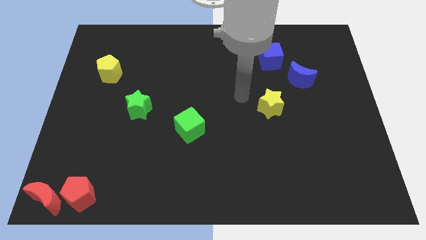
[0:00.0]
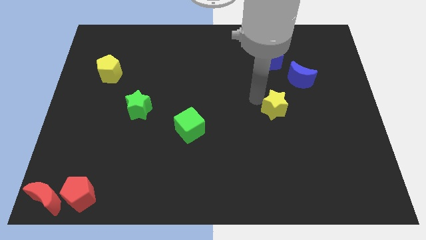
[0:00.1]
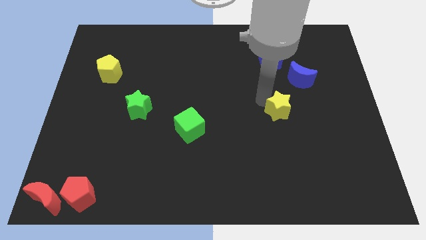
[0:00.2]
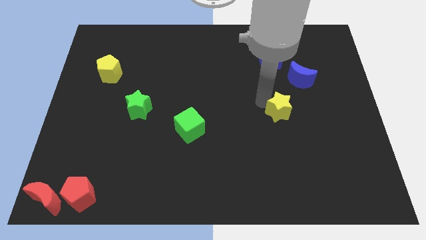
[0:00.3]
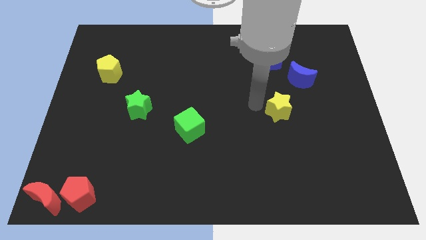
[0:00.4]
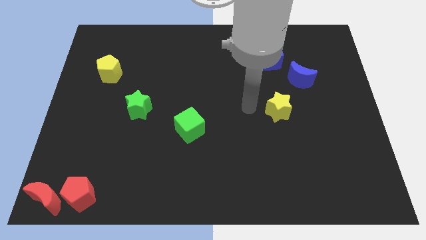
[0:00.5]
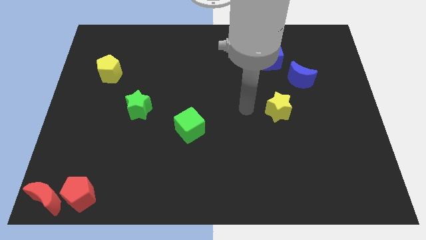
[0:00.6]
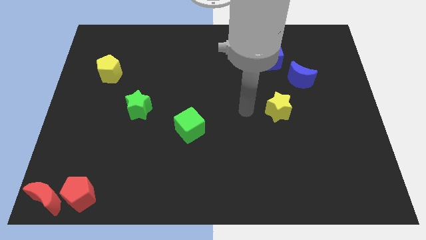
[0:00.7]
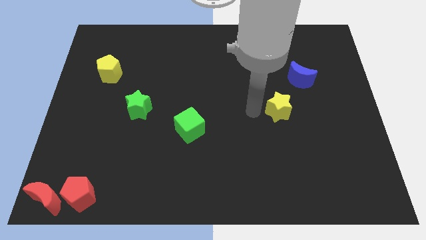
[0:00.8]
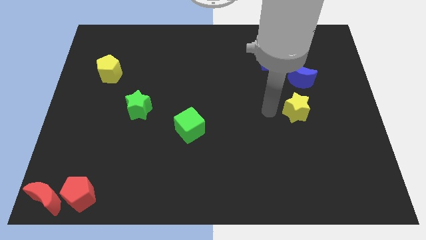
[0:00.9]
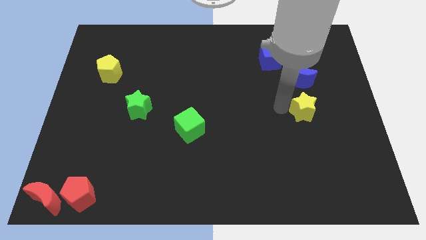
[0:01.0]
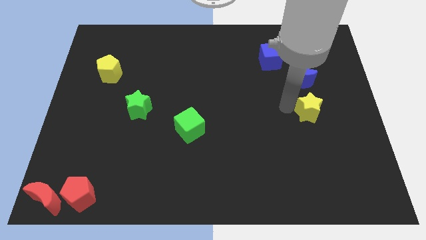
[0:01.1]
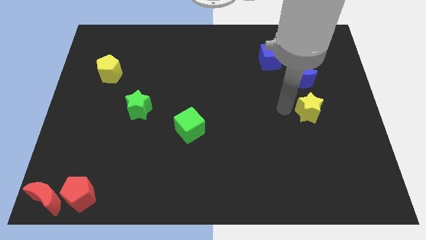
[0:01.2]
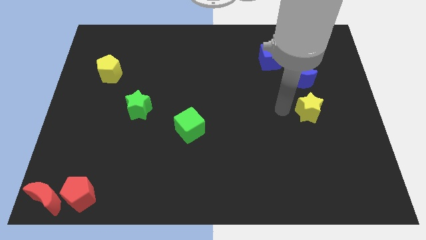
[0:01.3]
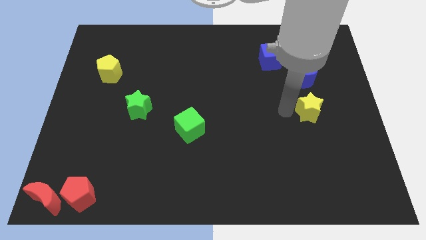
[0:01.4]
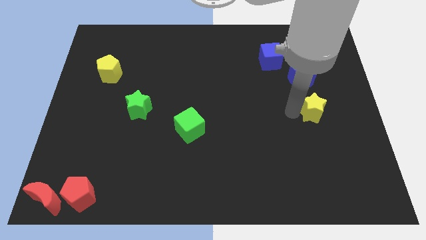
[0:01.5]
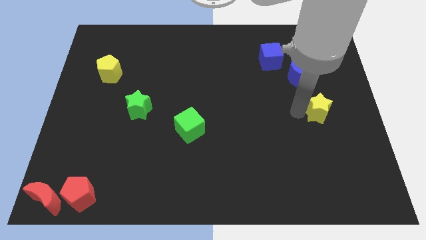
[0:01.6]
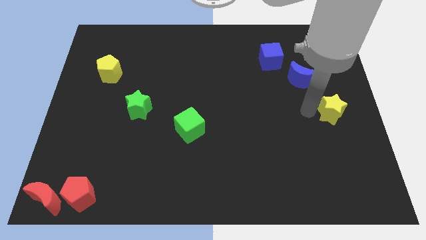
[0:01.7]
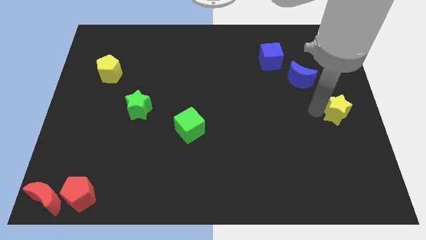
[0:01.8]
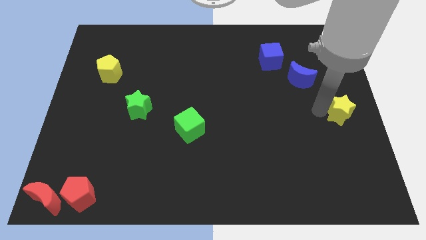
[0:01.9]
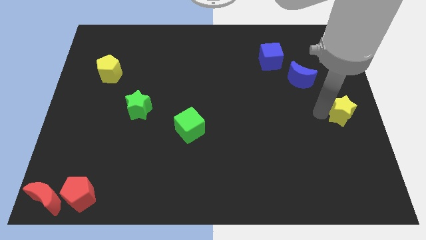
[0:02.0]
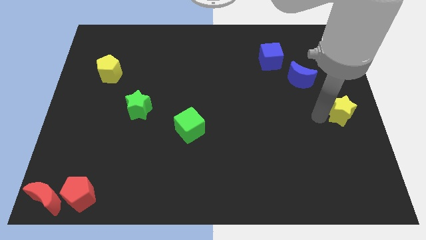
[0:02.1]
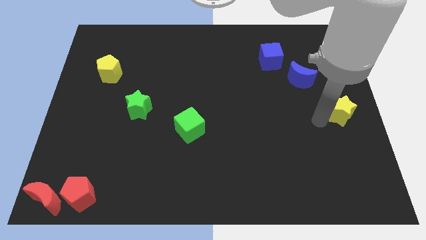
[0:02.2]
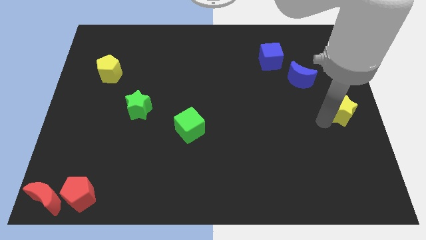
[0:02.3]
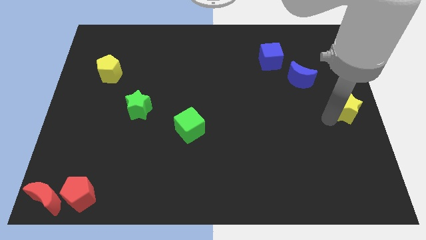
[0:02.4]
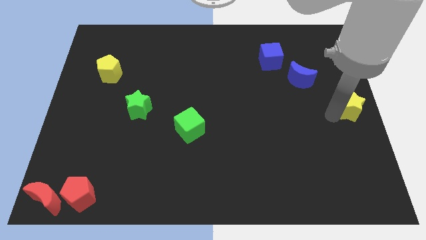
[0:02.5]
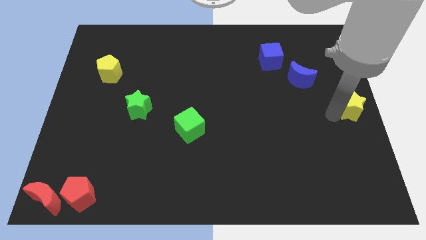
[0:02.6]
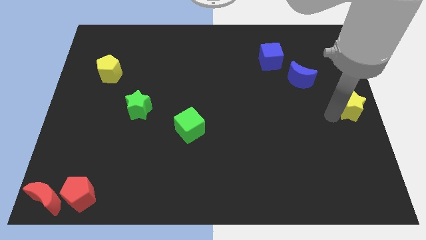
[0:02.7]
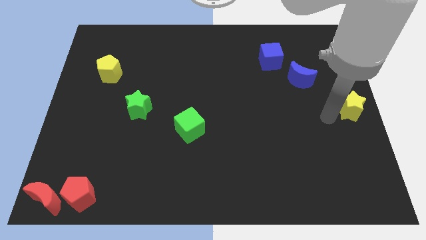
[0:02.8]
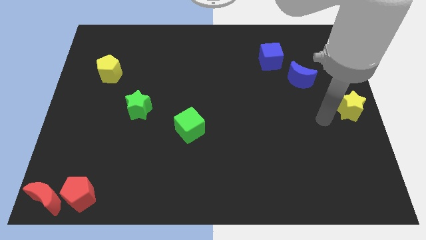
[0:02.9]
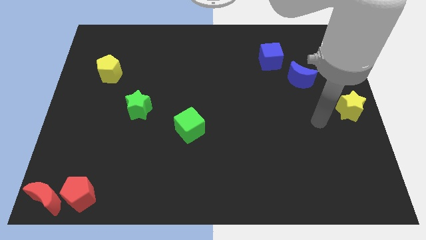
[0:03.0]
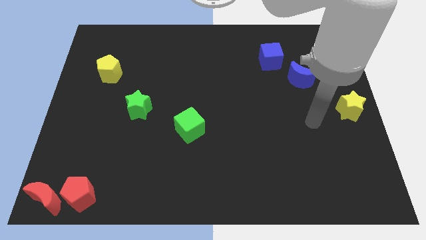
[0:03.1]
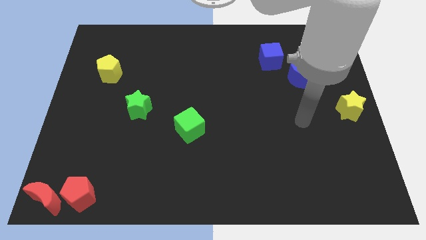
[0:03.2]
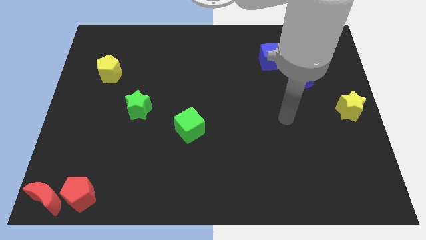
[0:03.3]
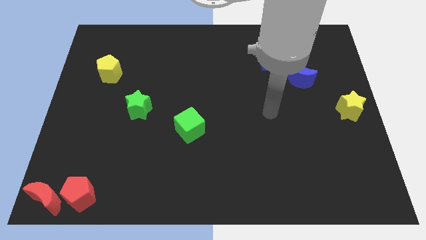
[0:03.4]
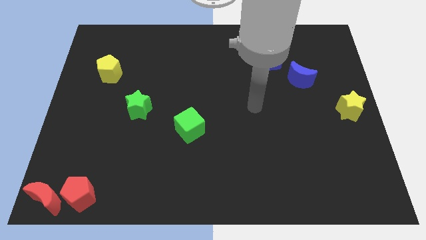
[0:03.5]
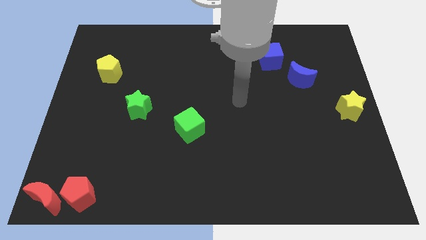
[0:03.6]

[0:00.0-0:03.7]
move the yellow star to the right center of the board

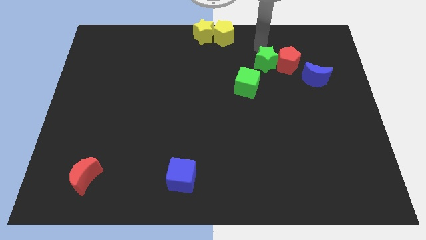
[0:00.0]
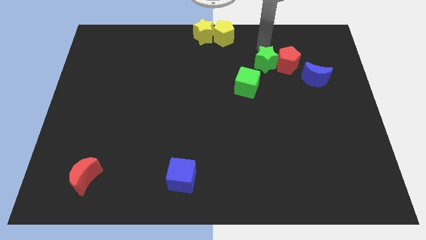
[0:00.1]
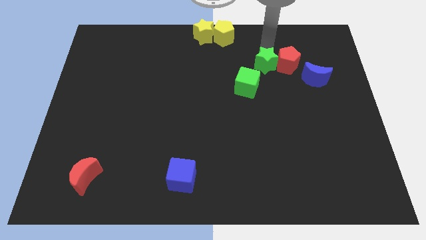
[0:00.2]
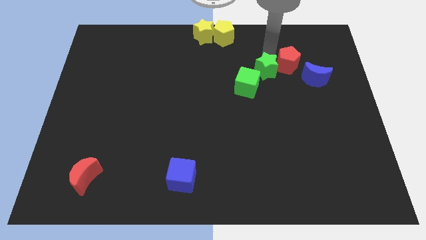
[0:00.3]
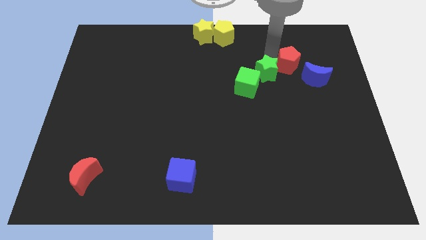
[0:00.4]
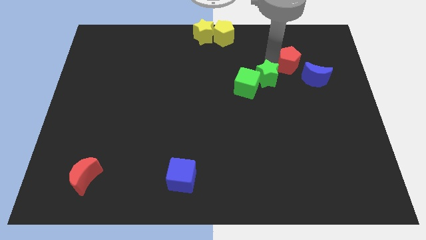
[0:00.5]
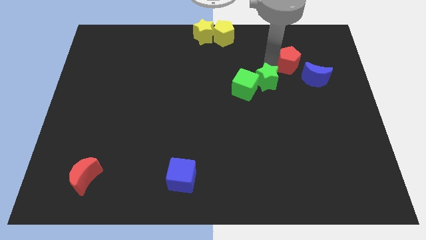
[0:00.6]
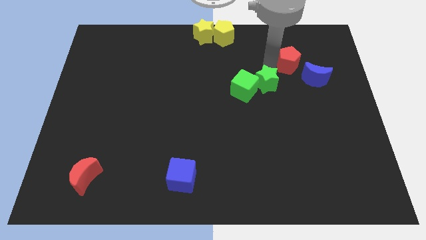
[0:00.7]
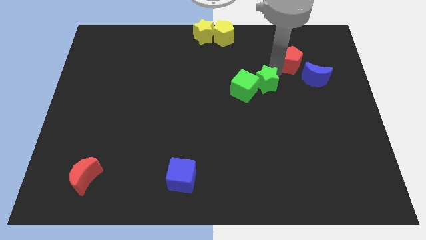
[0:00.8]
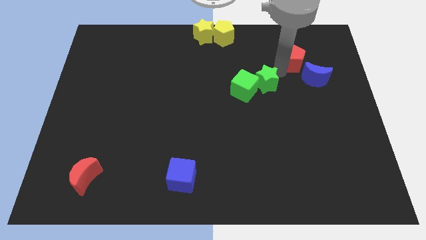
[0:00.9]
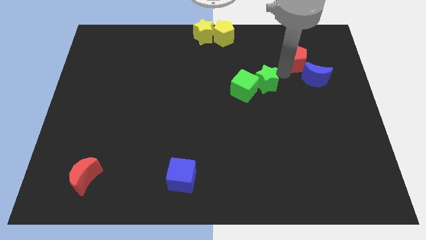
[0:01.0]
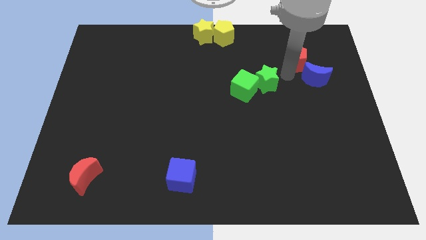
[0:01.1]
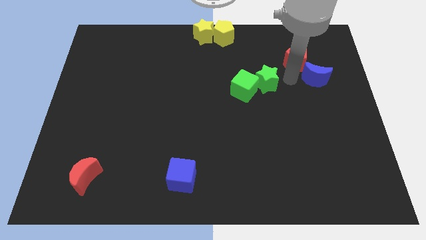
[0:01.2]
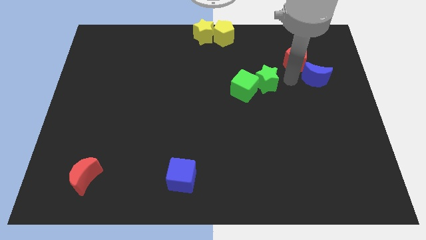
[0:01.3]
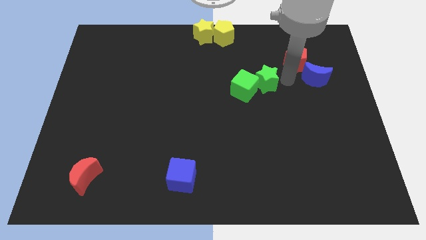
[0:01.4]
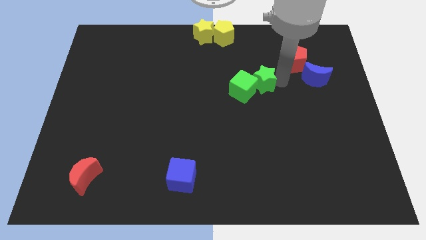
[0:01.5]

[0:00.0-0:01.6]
separate the green star from the red pentagon

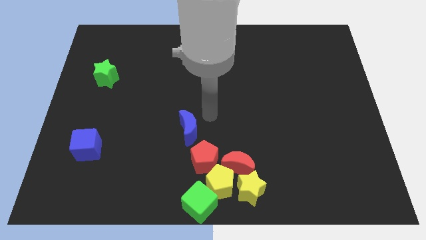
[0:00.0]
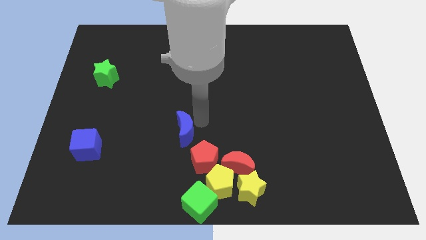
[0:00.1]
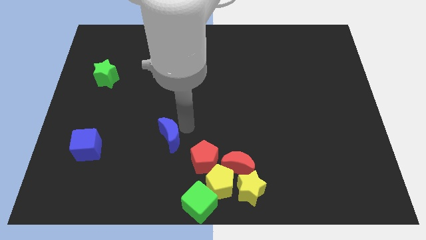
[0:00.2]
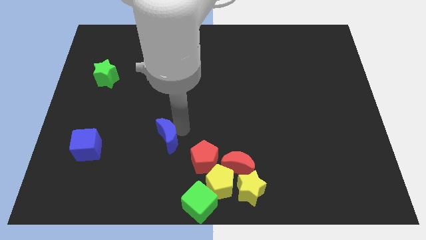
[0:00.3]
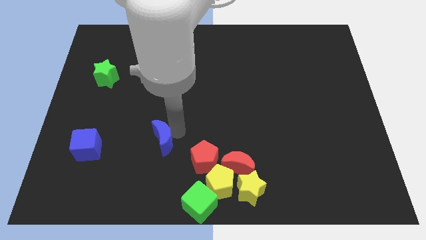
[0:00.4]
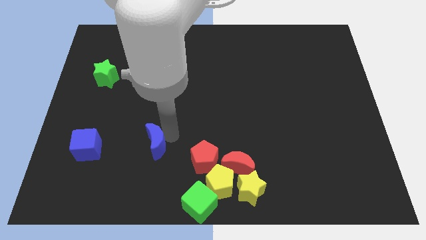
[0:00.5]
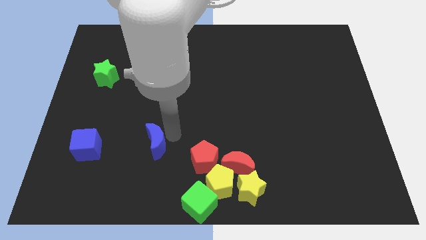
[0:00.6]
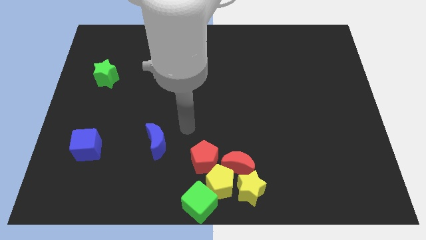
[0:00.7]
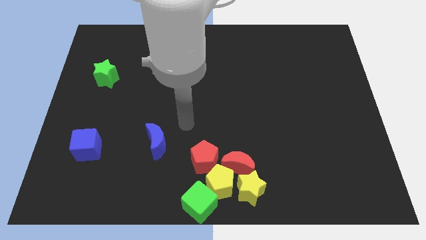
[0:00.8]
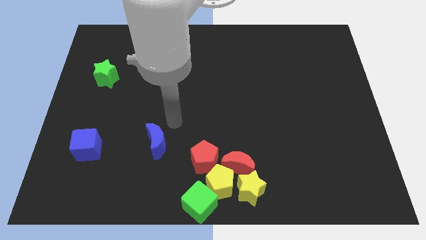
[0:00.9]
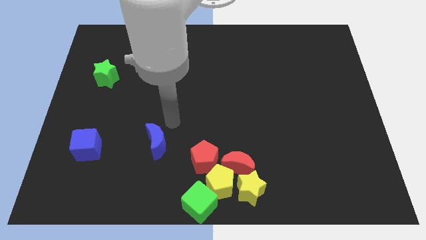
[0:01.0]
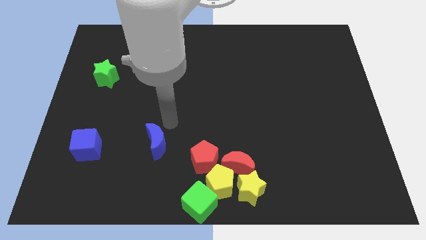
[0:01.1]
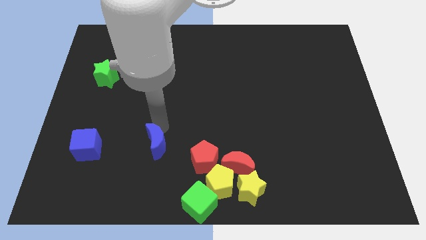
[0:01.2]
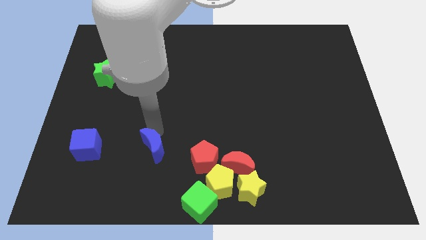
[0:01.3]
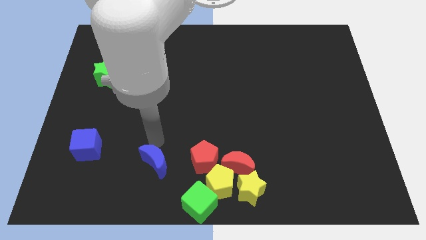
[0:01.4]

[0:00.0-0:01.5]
move the blue crescent horizontally to the right side of the blue cube

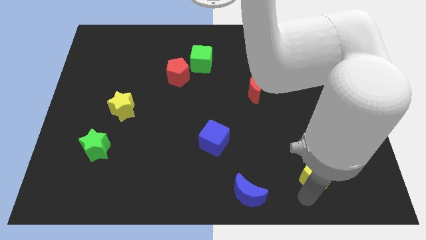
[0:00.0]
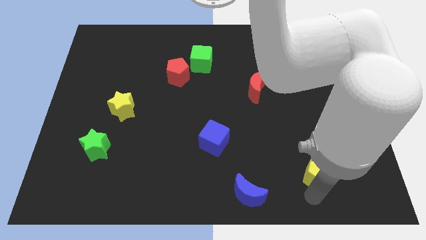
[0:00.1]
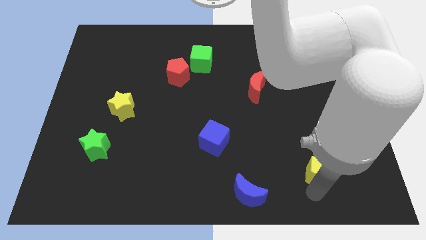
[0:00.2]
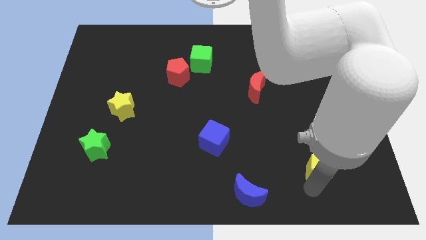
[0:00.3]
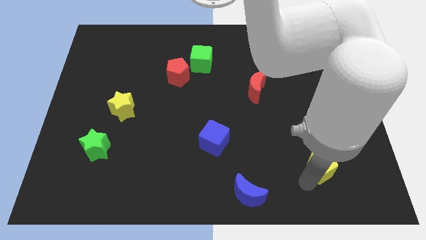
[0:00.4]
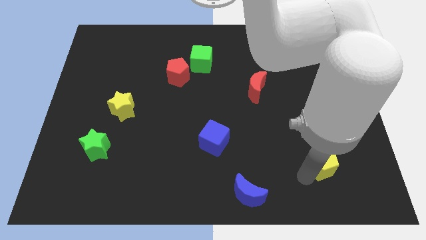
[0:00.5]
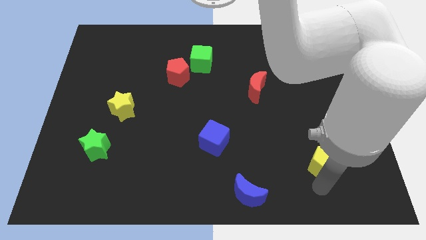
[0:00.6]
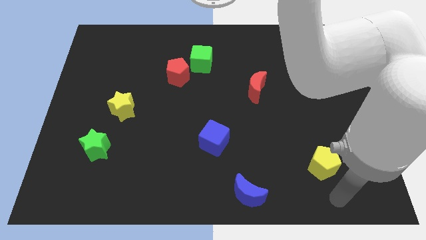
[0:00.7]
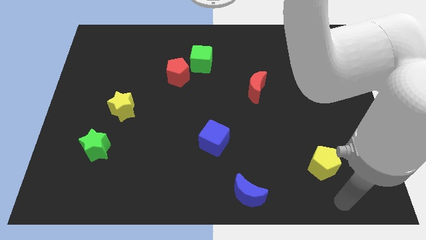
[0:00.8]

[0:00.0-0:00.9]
move your arm away from yellow pentagon

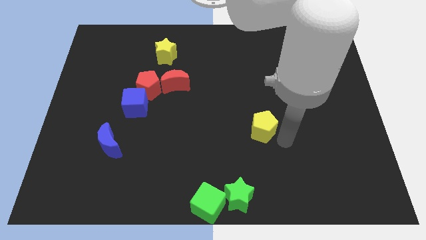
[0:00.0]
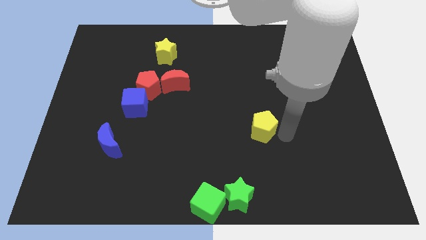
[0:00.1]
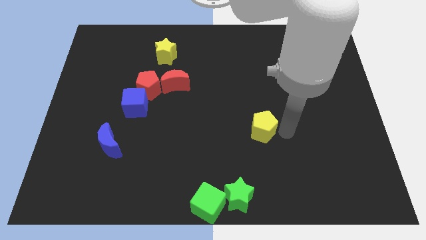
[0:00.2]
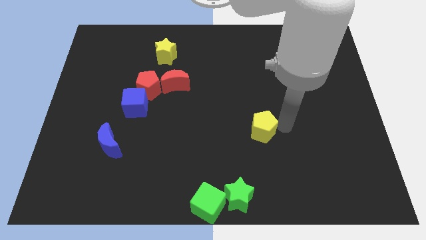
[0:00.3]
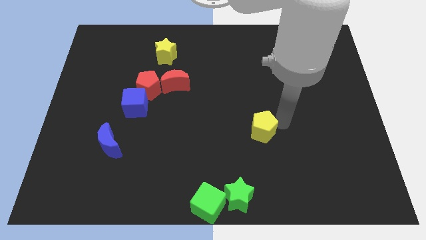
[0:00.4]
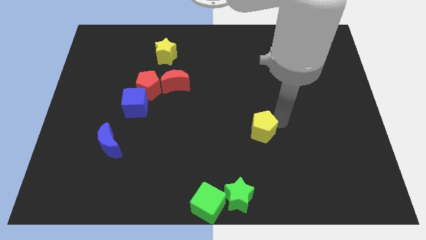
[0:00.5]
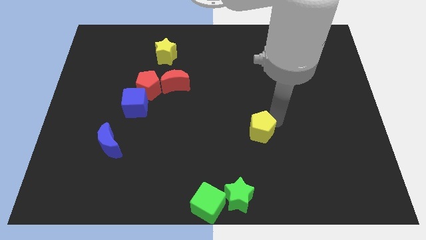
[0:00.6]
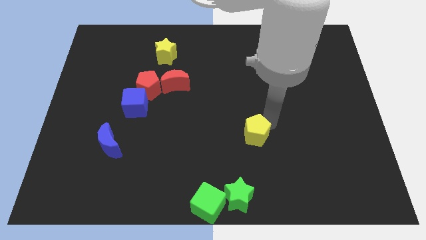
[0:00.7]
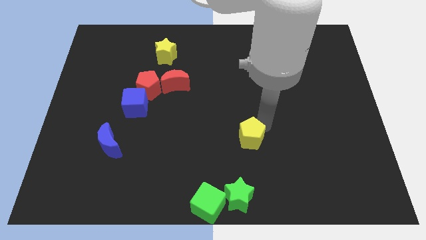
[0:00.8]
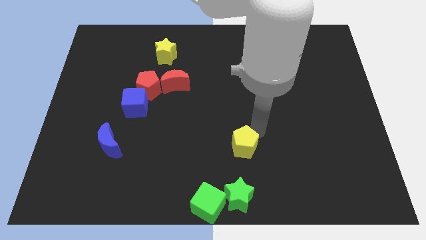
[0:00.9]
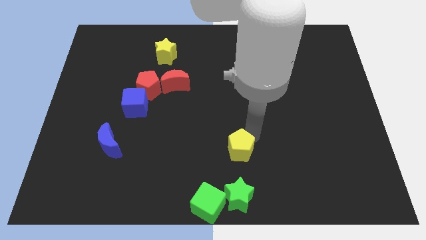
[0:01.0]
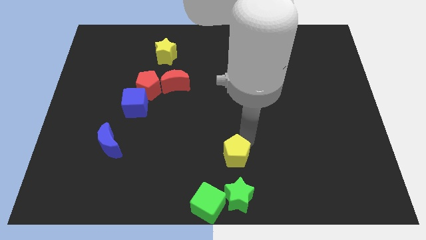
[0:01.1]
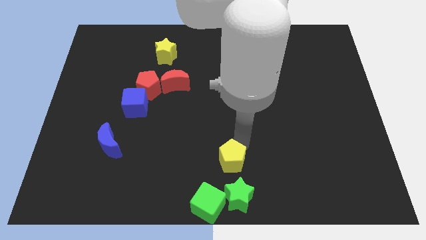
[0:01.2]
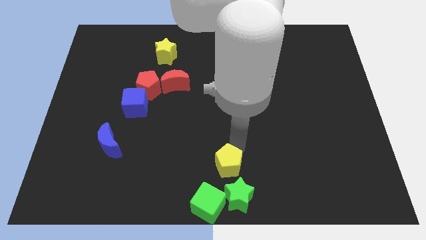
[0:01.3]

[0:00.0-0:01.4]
push the yellow pentagon towards the green star
